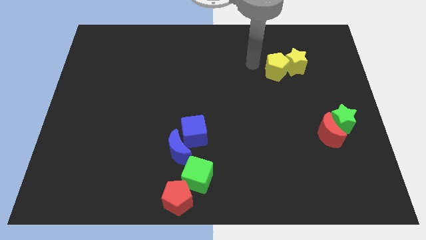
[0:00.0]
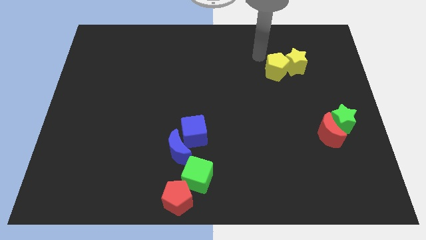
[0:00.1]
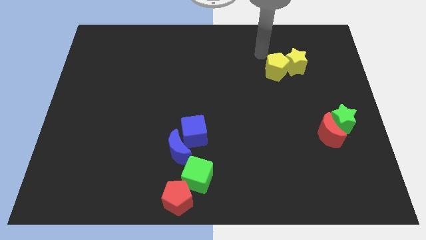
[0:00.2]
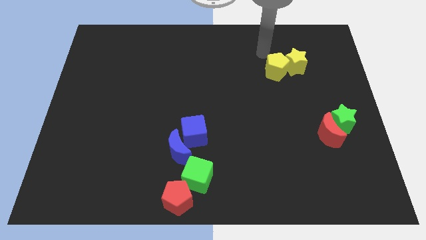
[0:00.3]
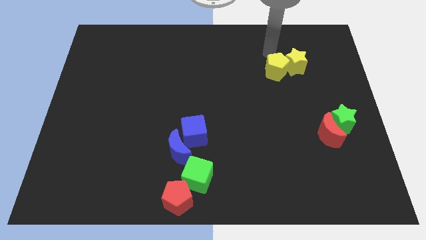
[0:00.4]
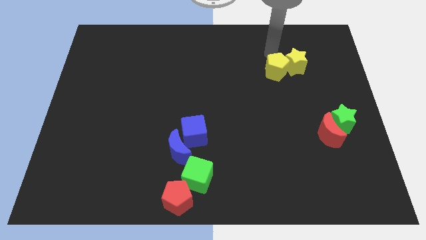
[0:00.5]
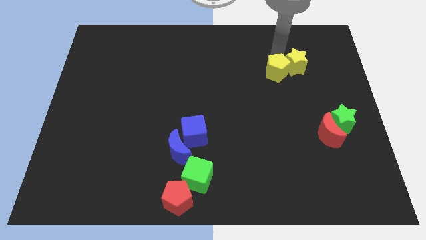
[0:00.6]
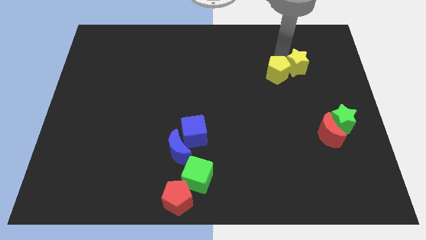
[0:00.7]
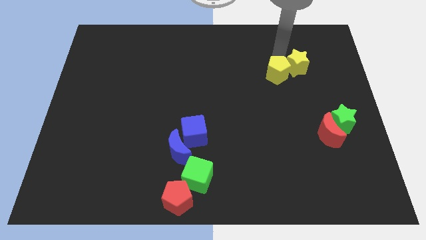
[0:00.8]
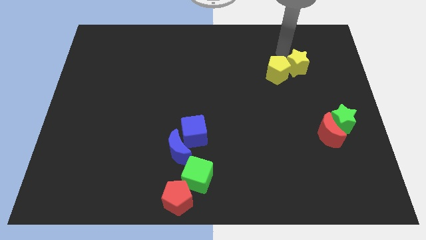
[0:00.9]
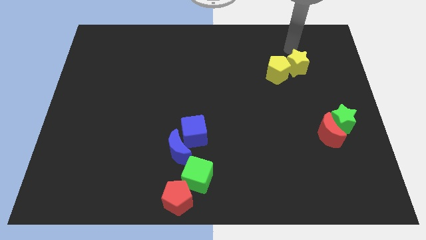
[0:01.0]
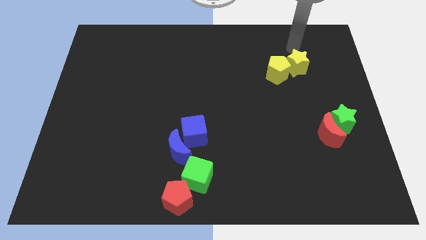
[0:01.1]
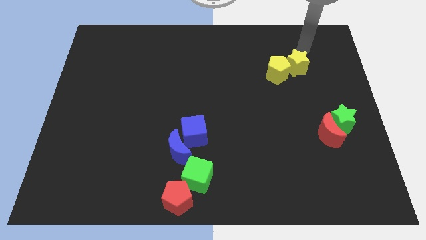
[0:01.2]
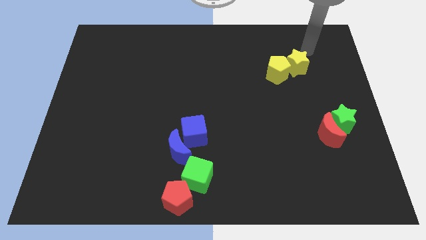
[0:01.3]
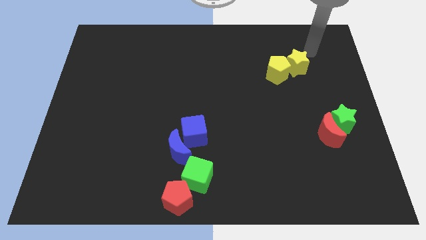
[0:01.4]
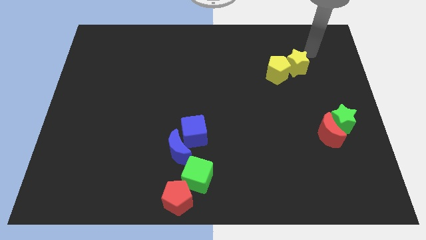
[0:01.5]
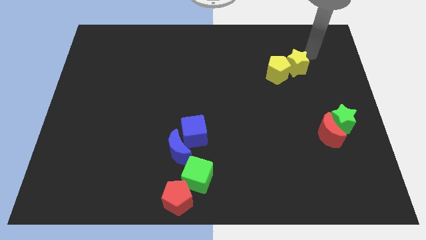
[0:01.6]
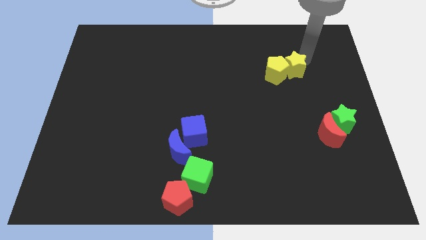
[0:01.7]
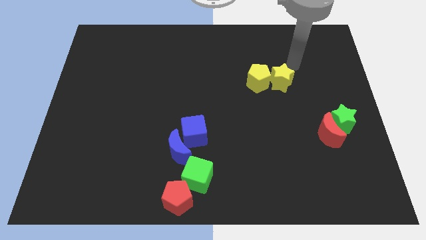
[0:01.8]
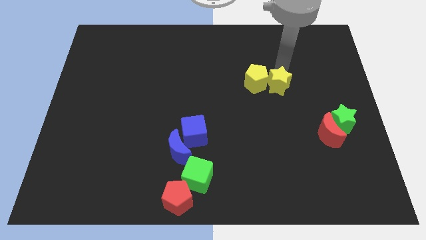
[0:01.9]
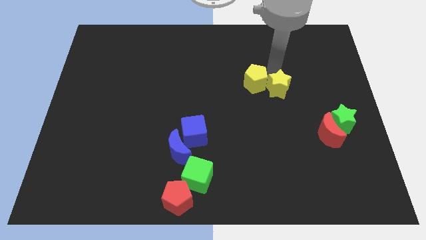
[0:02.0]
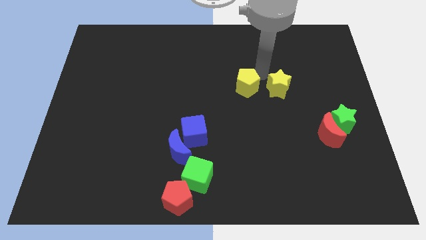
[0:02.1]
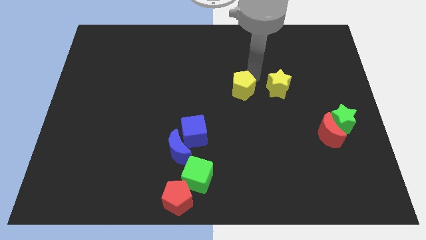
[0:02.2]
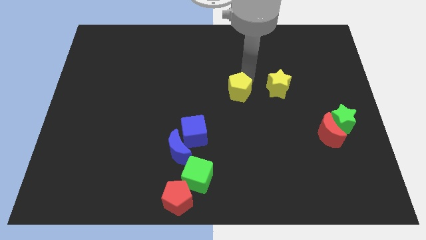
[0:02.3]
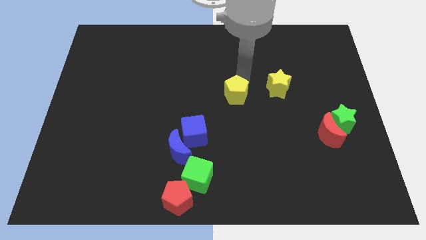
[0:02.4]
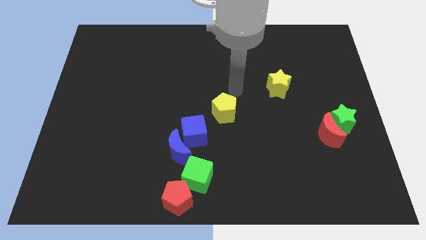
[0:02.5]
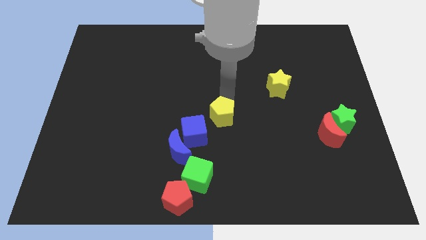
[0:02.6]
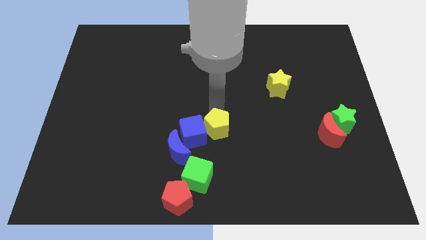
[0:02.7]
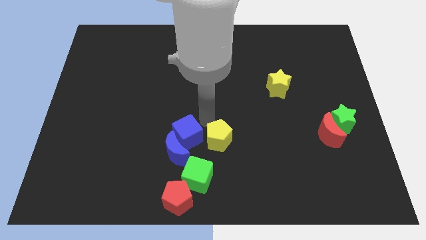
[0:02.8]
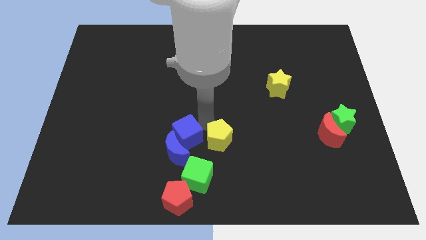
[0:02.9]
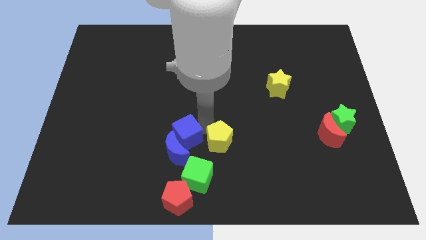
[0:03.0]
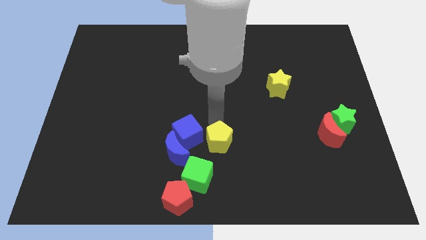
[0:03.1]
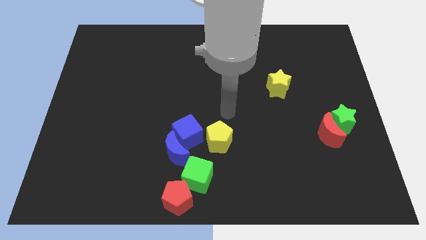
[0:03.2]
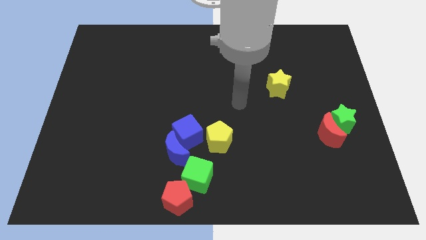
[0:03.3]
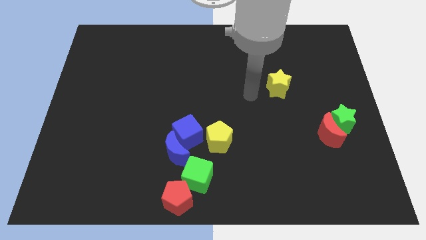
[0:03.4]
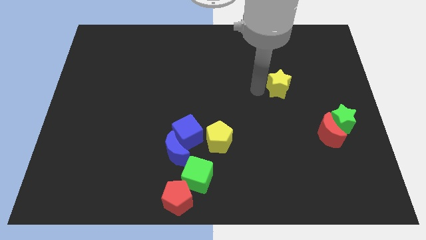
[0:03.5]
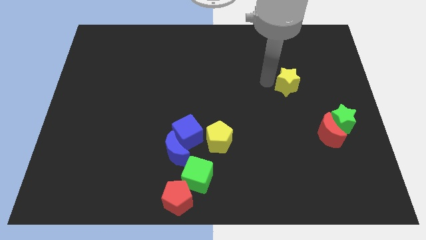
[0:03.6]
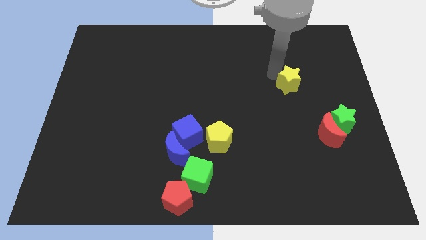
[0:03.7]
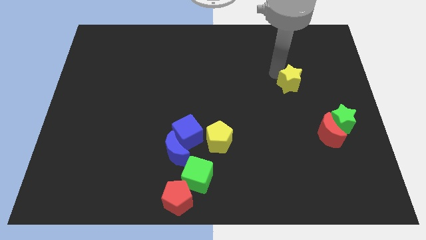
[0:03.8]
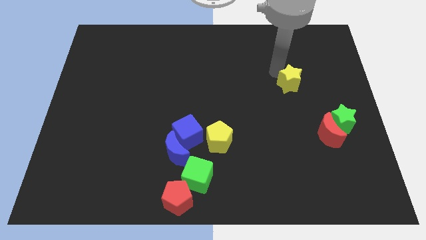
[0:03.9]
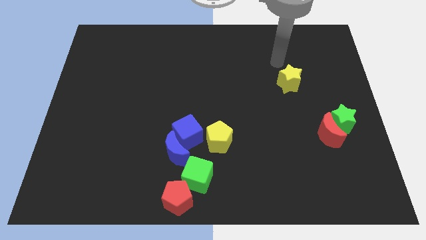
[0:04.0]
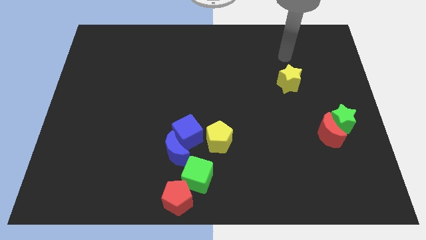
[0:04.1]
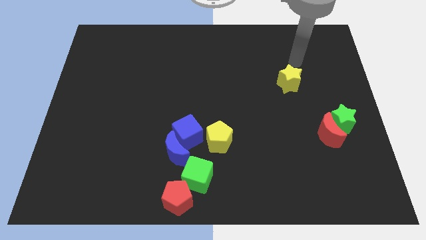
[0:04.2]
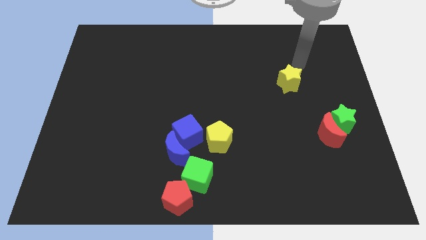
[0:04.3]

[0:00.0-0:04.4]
move the yellow star towards the center side

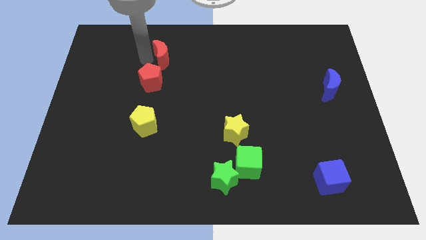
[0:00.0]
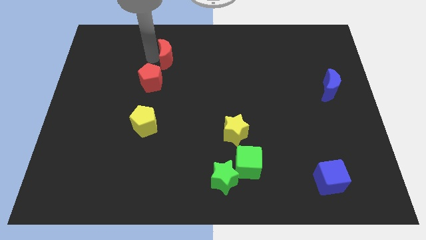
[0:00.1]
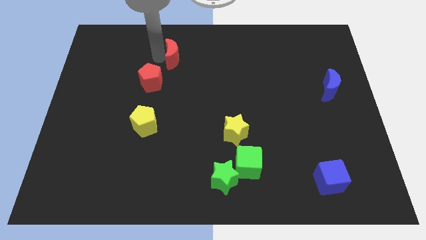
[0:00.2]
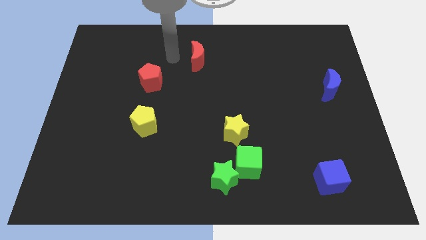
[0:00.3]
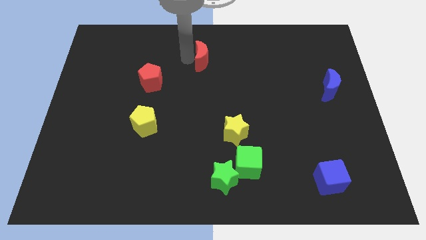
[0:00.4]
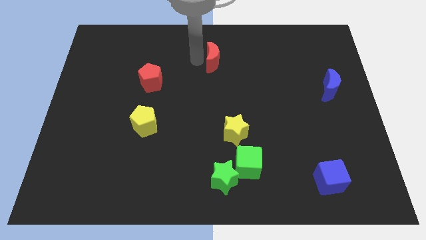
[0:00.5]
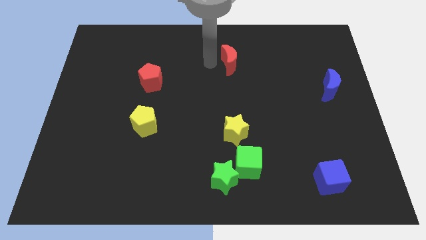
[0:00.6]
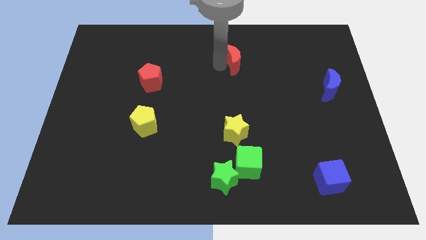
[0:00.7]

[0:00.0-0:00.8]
separate red moon from red pentagon

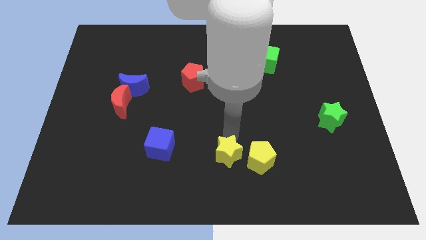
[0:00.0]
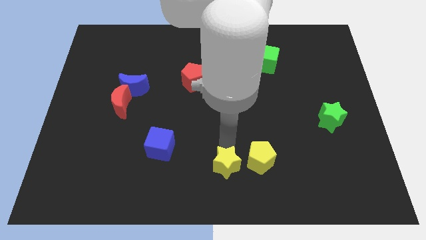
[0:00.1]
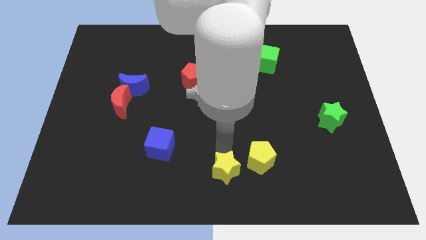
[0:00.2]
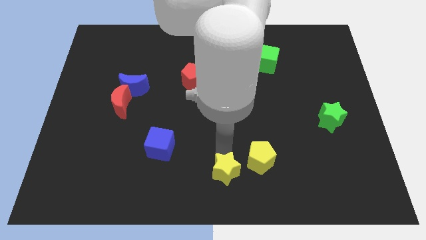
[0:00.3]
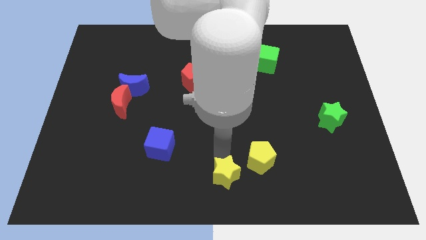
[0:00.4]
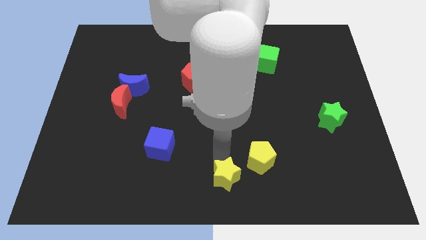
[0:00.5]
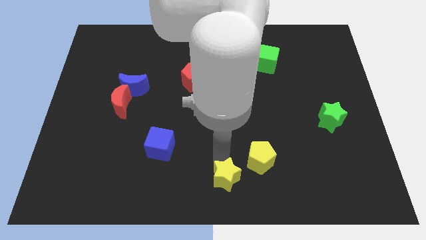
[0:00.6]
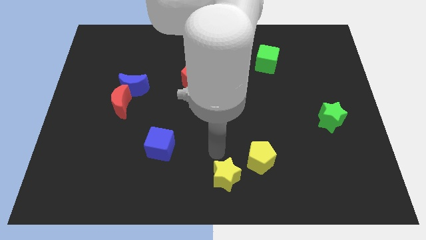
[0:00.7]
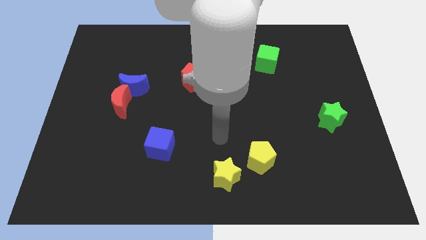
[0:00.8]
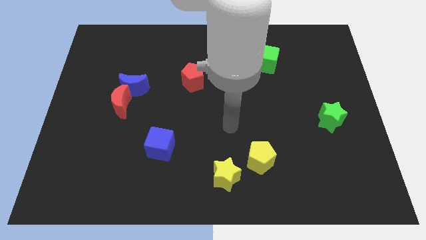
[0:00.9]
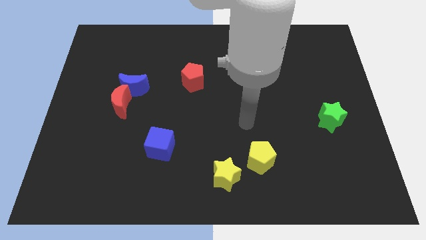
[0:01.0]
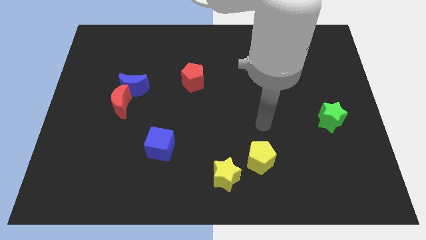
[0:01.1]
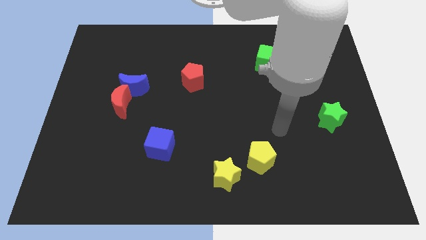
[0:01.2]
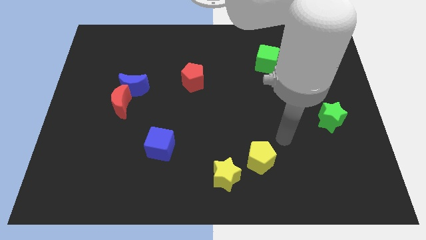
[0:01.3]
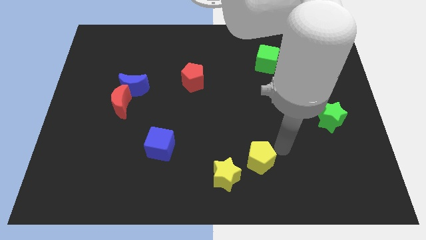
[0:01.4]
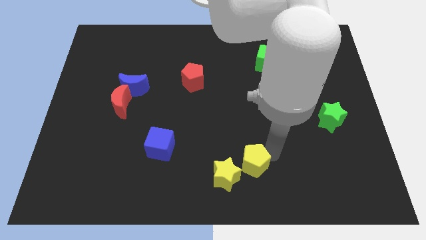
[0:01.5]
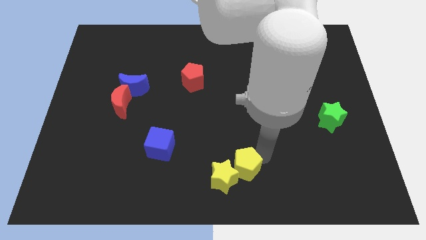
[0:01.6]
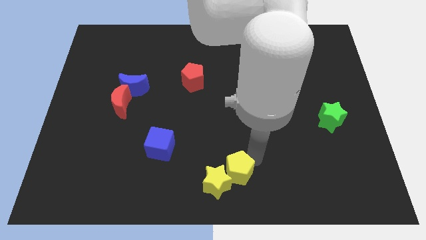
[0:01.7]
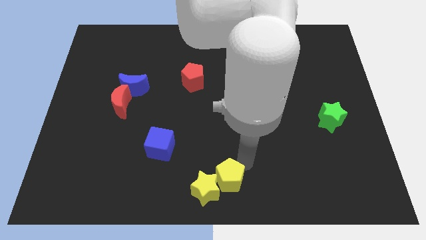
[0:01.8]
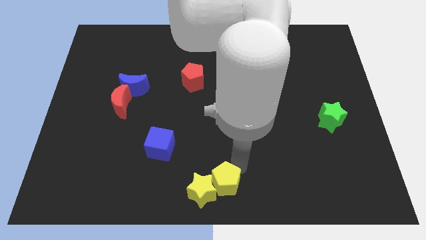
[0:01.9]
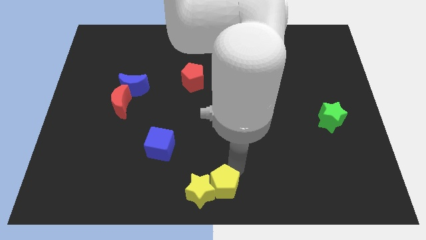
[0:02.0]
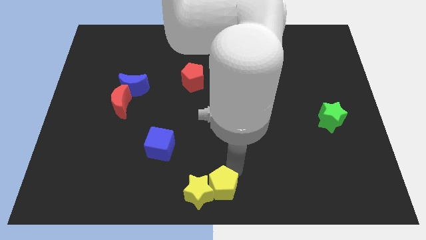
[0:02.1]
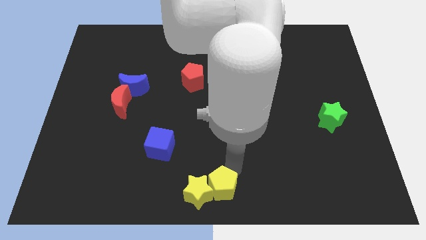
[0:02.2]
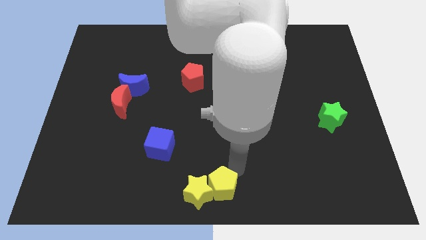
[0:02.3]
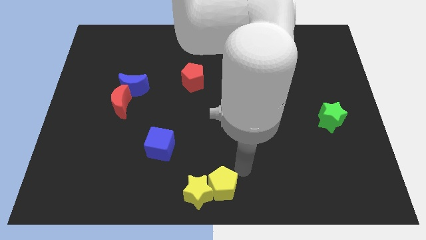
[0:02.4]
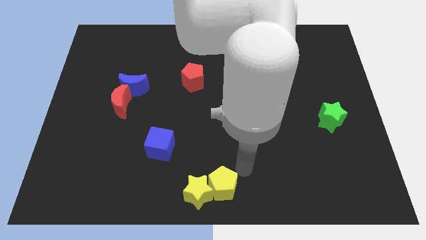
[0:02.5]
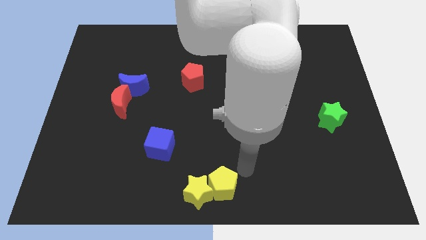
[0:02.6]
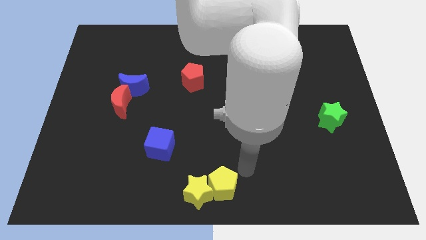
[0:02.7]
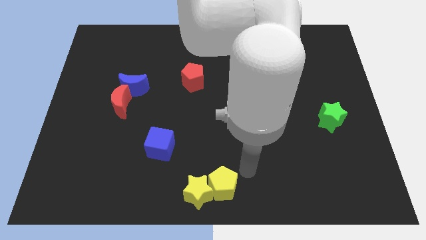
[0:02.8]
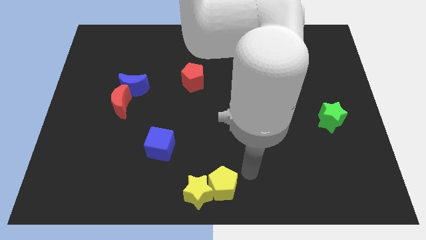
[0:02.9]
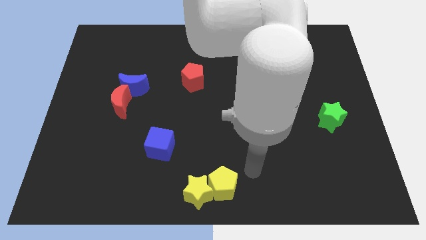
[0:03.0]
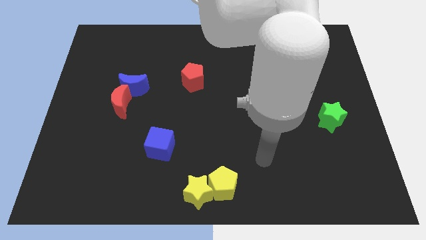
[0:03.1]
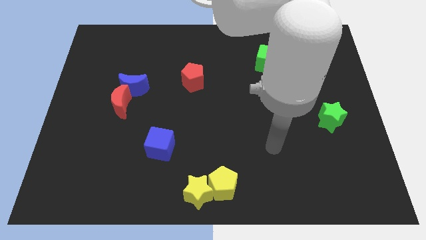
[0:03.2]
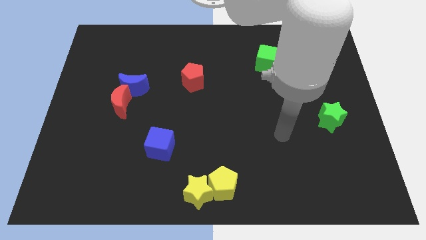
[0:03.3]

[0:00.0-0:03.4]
push the yellow star along with yellow pentagon to the bottom center

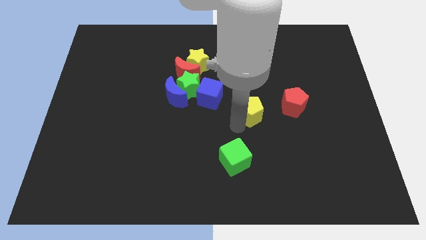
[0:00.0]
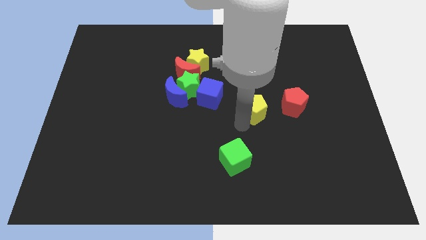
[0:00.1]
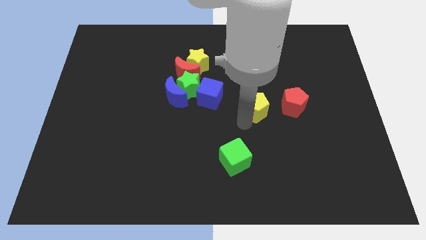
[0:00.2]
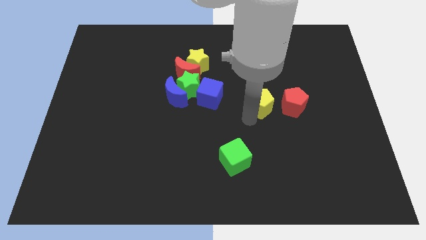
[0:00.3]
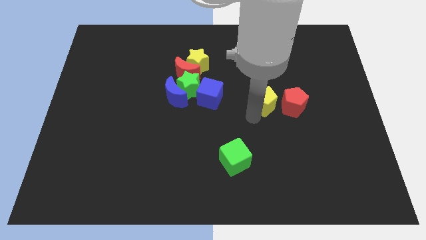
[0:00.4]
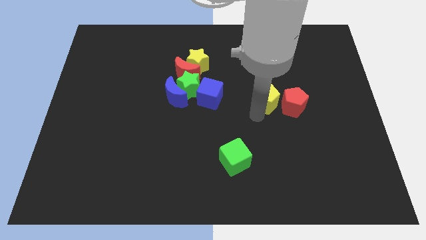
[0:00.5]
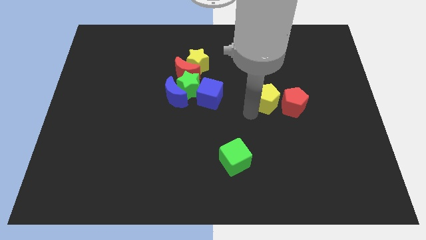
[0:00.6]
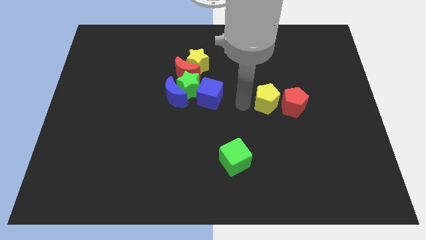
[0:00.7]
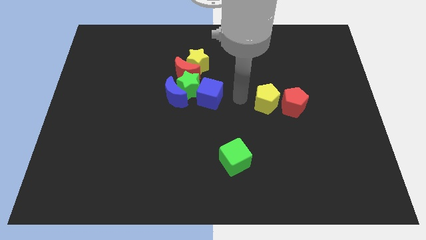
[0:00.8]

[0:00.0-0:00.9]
place the yellow pentagon left of the red pentagon
